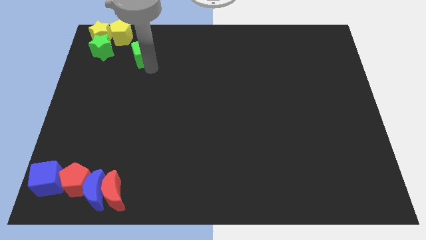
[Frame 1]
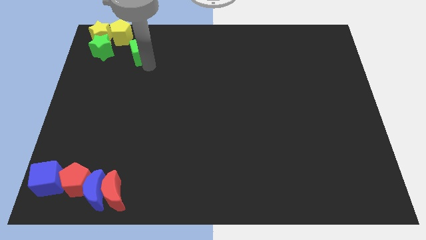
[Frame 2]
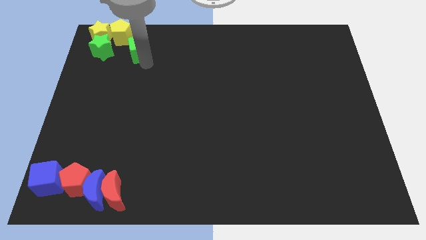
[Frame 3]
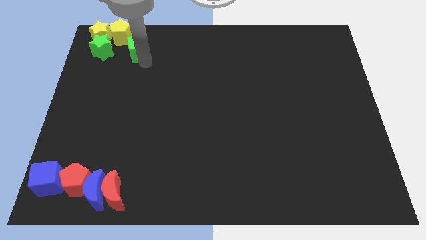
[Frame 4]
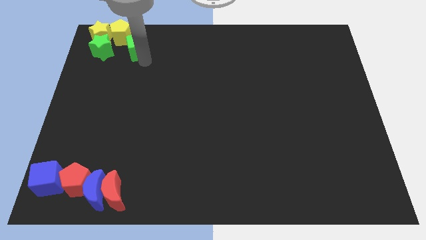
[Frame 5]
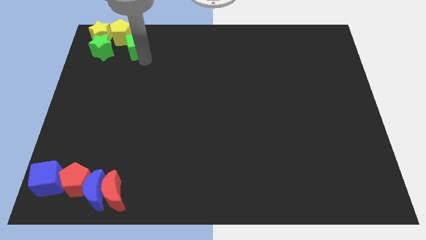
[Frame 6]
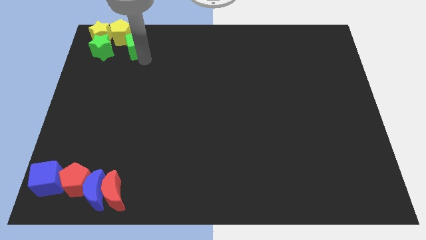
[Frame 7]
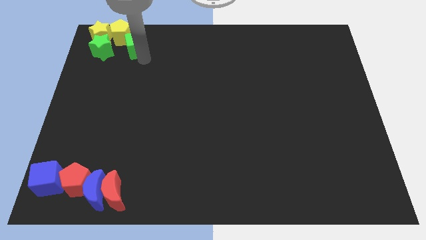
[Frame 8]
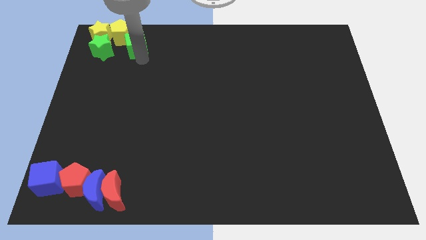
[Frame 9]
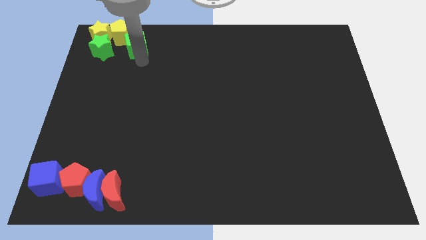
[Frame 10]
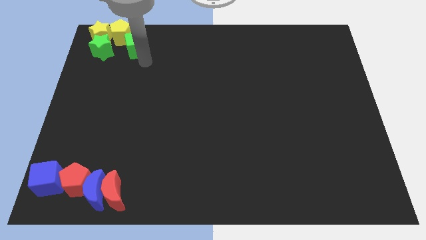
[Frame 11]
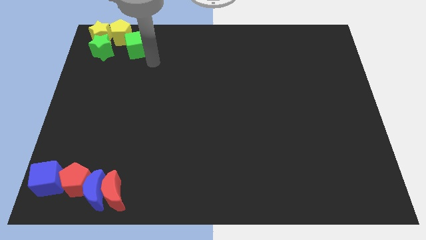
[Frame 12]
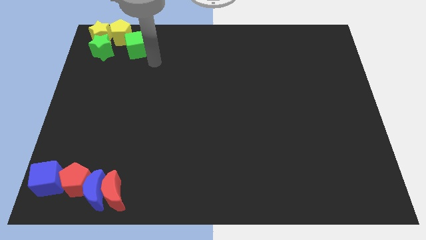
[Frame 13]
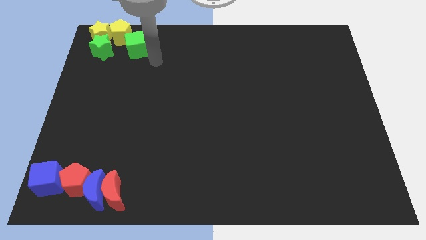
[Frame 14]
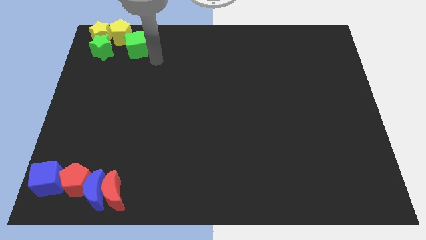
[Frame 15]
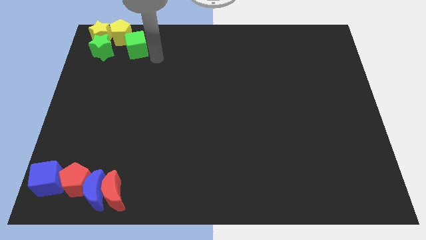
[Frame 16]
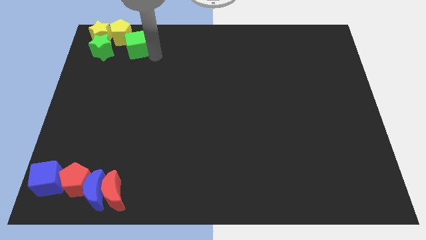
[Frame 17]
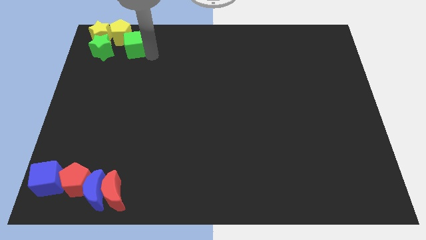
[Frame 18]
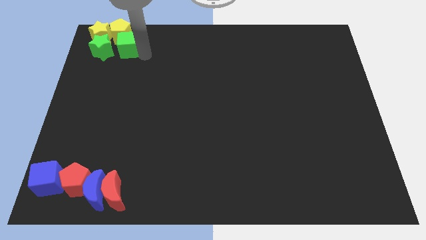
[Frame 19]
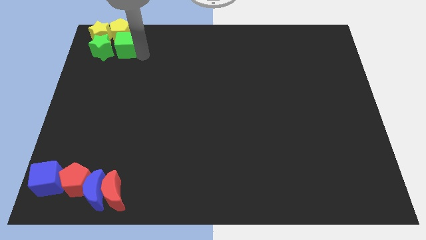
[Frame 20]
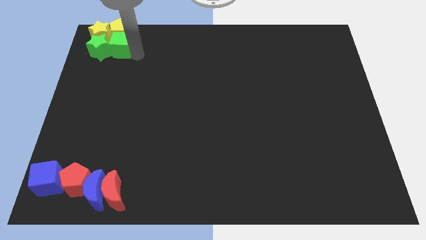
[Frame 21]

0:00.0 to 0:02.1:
push green cube into the group of blocks

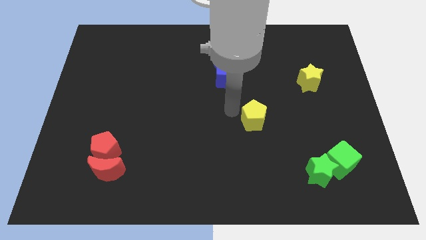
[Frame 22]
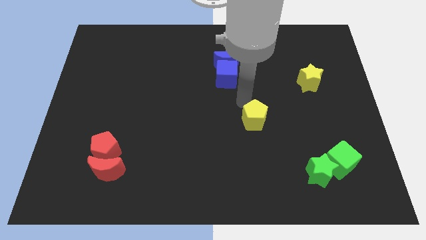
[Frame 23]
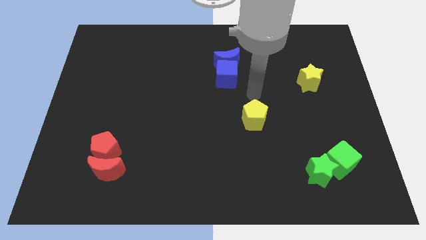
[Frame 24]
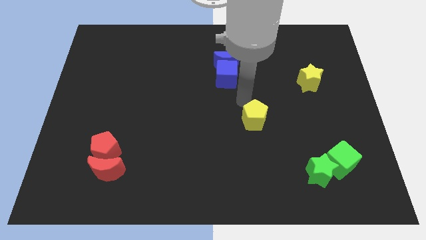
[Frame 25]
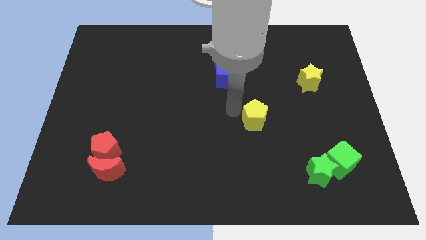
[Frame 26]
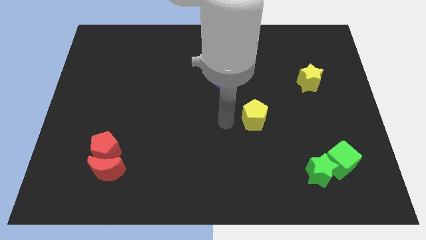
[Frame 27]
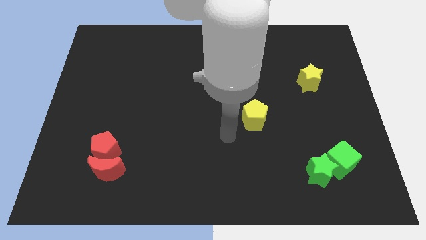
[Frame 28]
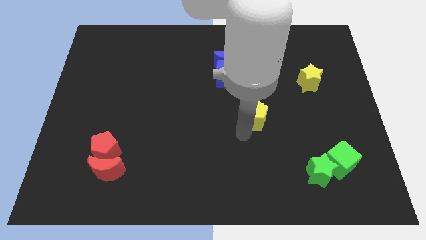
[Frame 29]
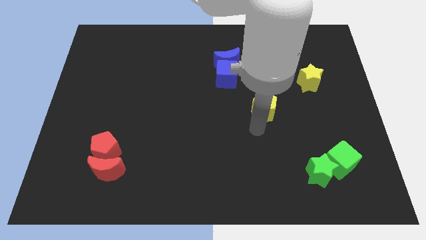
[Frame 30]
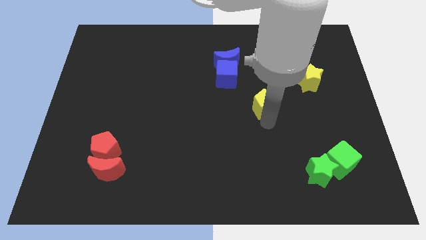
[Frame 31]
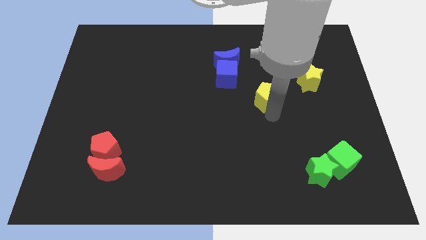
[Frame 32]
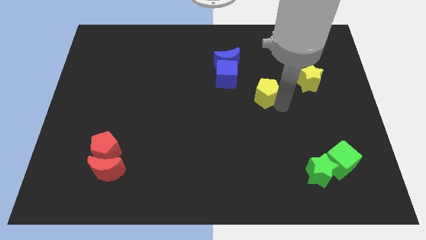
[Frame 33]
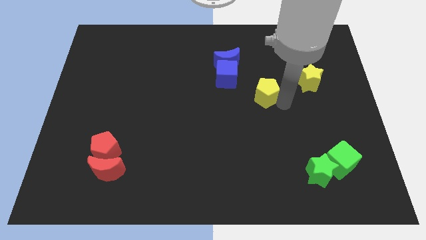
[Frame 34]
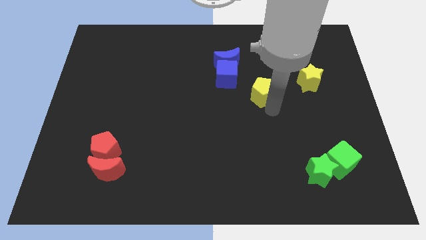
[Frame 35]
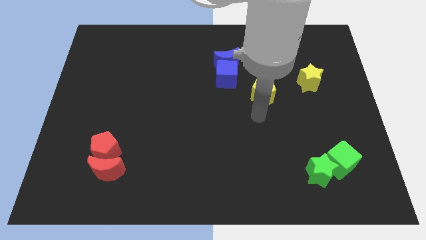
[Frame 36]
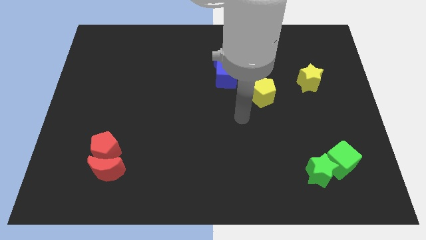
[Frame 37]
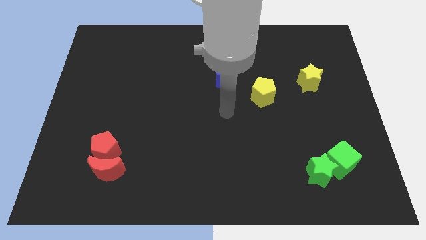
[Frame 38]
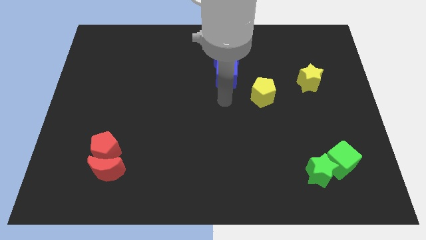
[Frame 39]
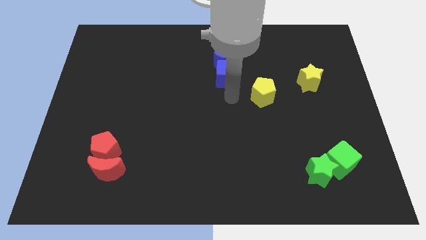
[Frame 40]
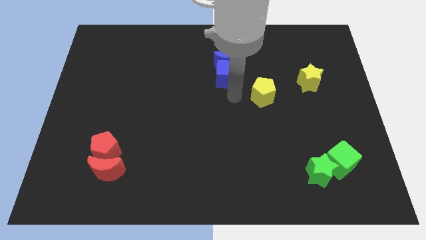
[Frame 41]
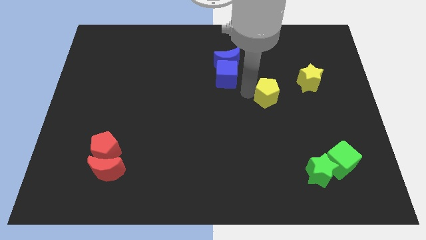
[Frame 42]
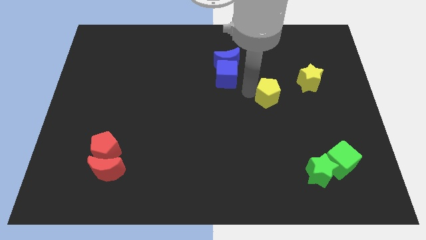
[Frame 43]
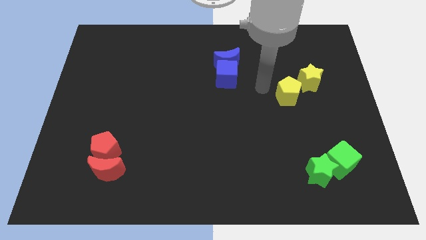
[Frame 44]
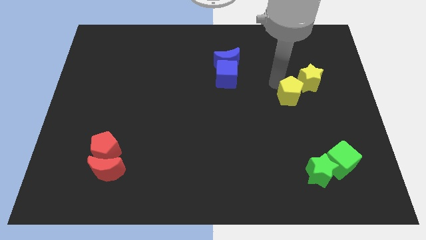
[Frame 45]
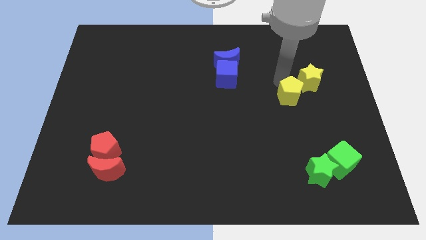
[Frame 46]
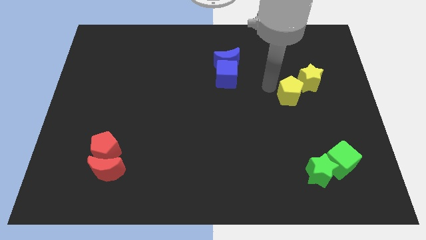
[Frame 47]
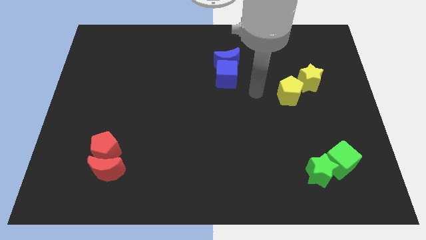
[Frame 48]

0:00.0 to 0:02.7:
place the yellow pentagon close to yellow star

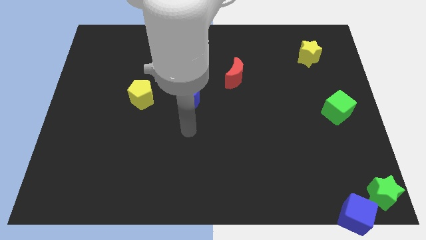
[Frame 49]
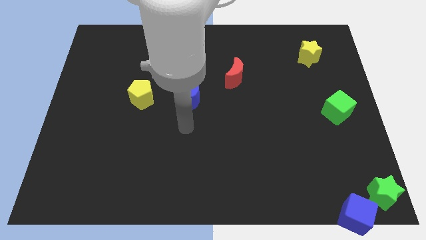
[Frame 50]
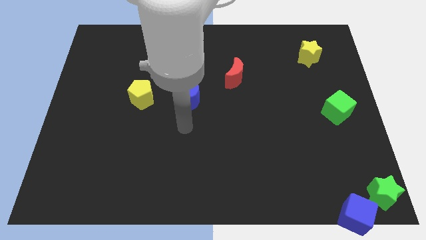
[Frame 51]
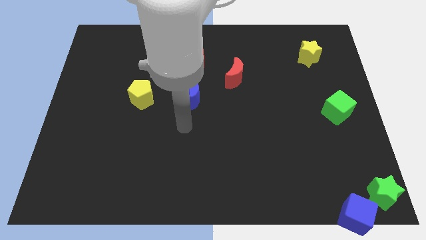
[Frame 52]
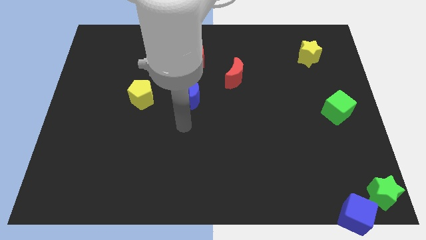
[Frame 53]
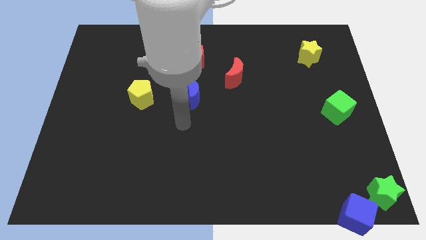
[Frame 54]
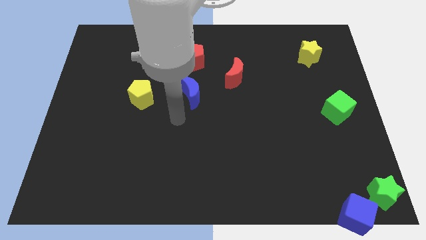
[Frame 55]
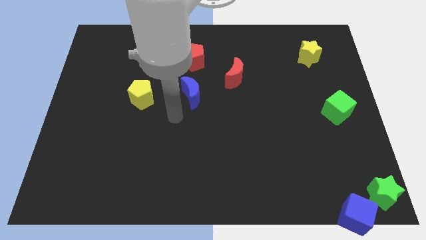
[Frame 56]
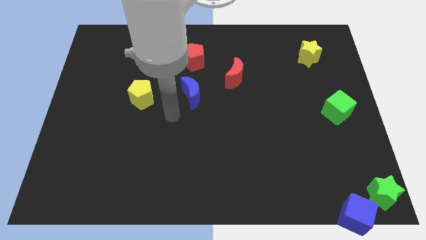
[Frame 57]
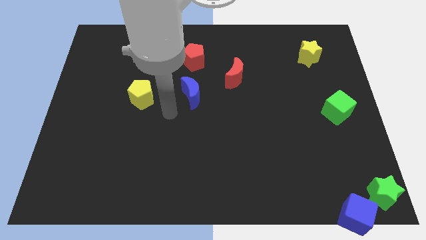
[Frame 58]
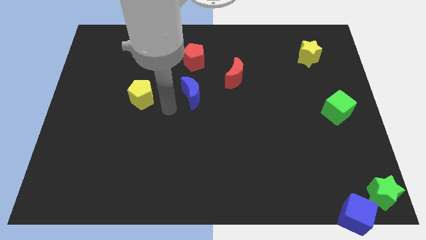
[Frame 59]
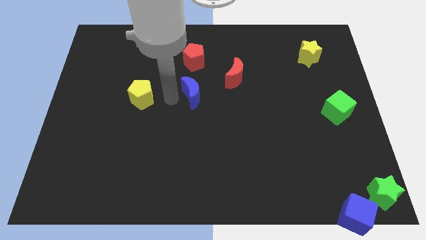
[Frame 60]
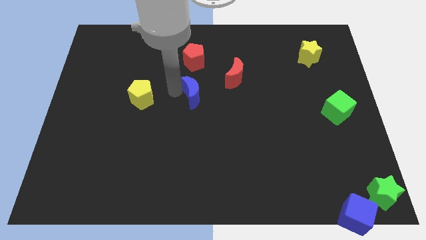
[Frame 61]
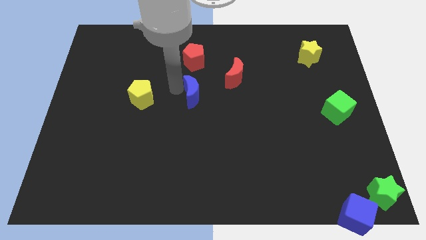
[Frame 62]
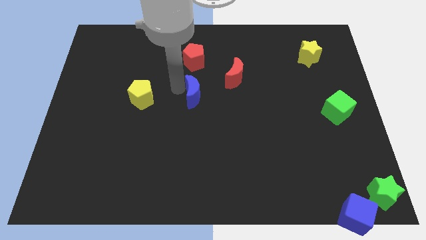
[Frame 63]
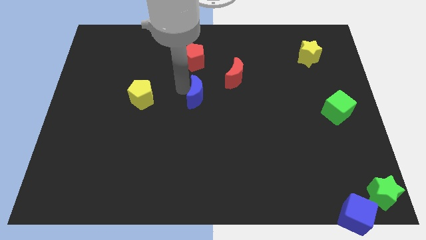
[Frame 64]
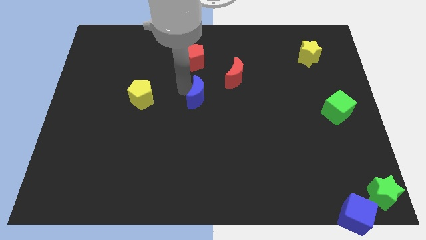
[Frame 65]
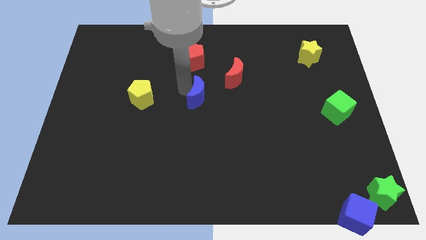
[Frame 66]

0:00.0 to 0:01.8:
tap the blue crescent

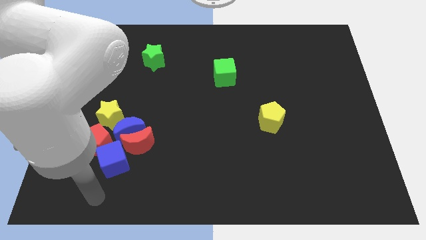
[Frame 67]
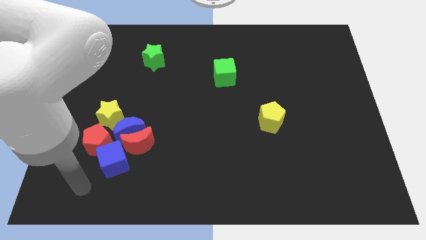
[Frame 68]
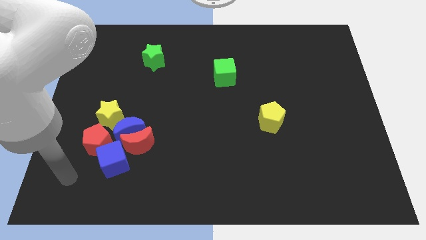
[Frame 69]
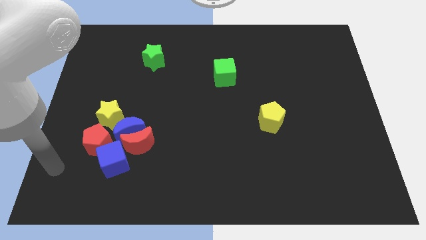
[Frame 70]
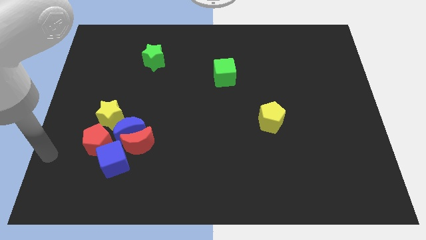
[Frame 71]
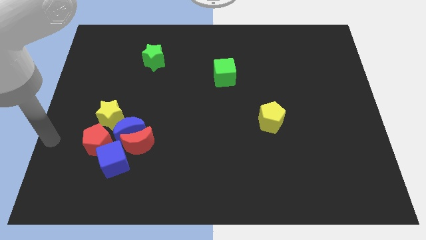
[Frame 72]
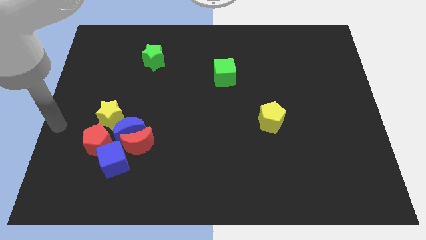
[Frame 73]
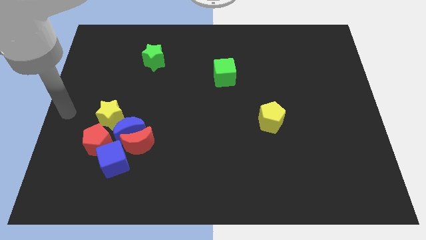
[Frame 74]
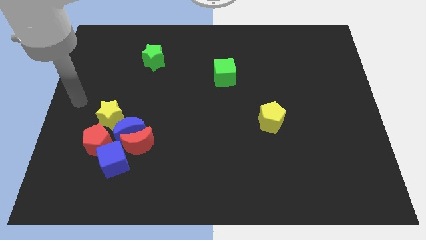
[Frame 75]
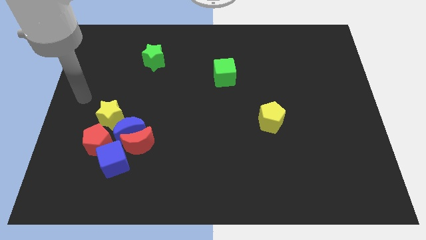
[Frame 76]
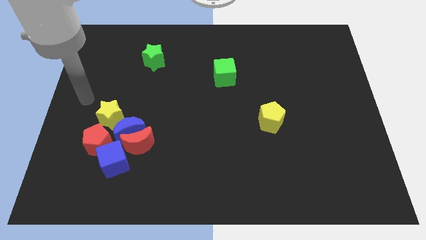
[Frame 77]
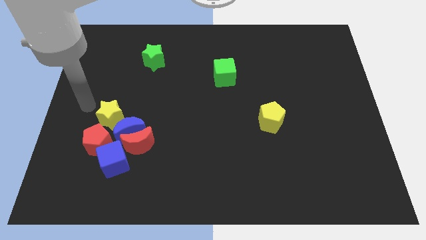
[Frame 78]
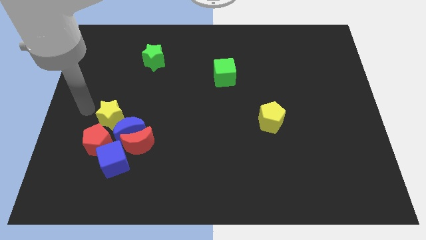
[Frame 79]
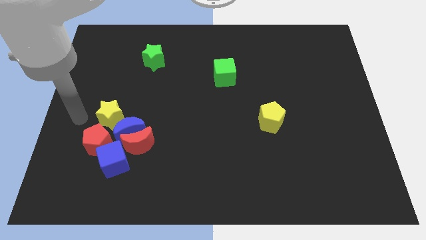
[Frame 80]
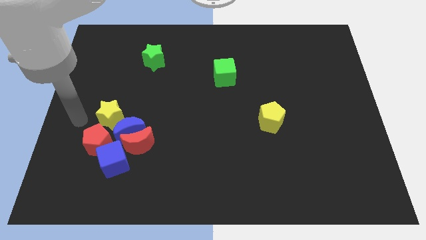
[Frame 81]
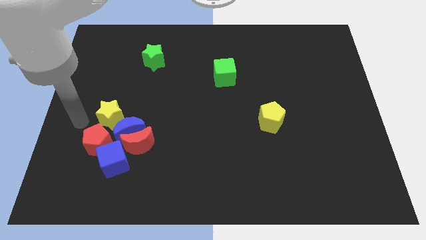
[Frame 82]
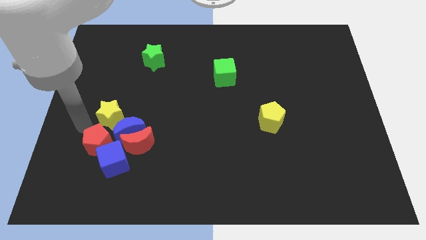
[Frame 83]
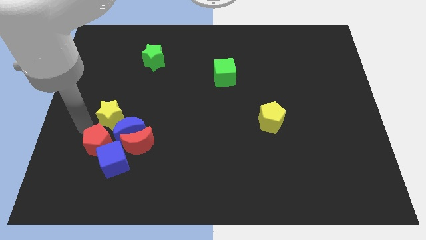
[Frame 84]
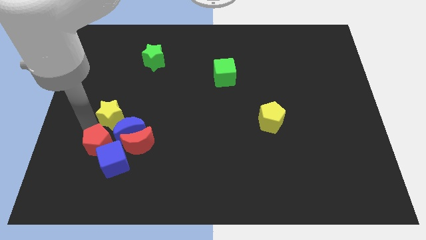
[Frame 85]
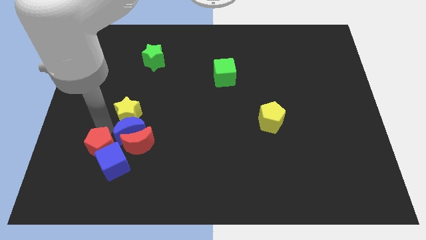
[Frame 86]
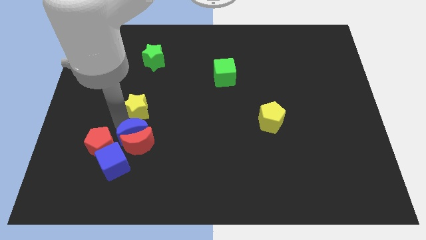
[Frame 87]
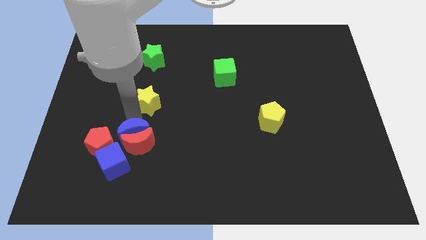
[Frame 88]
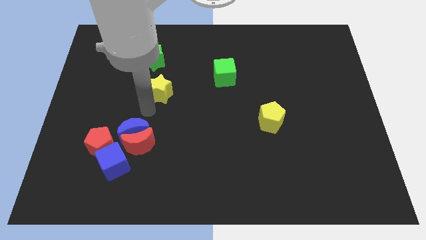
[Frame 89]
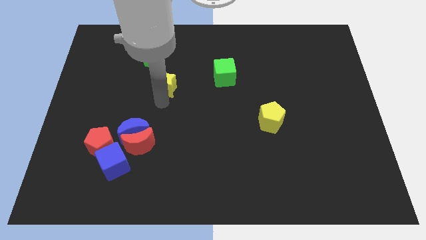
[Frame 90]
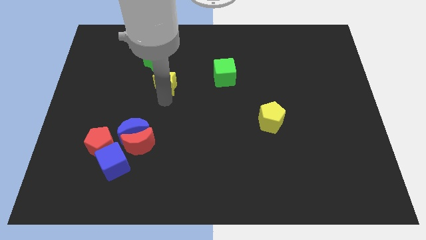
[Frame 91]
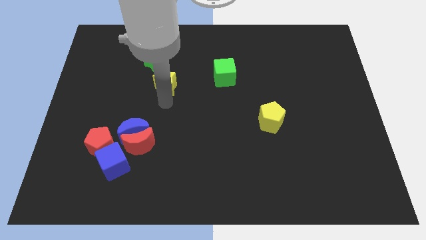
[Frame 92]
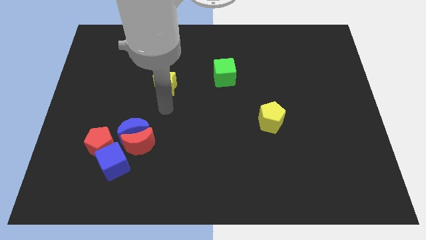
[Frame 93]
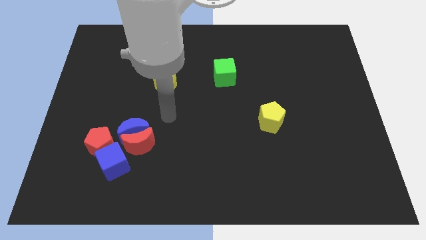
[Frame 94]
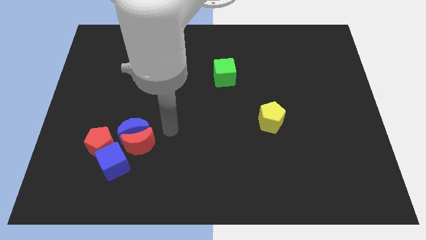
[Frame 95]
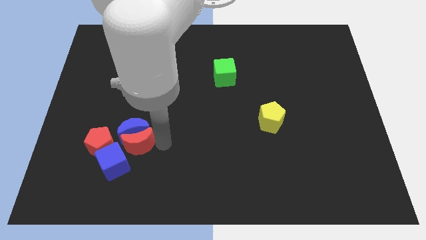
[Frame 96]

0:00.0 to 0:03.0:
place the yellow star to the bottom right of the green star
